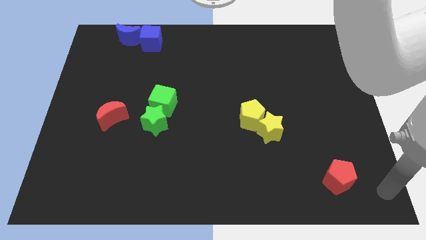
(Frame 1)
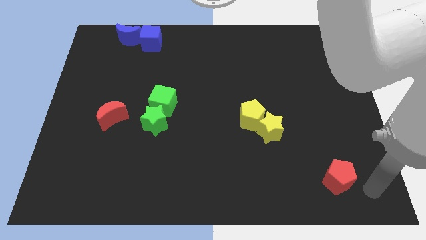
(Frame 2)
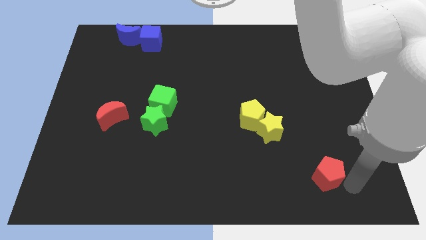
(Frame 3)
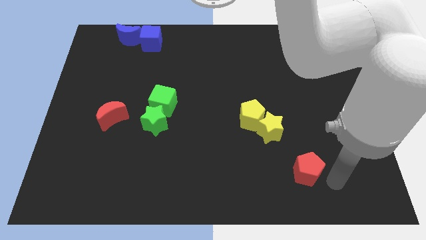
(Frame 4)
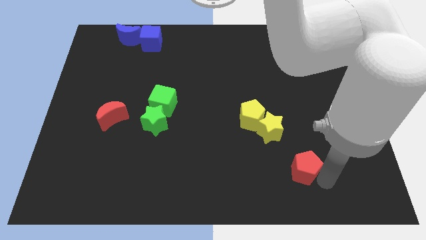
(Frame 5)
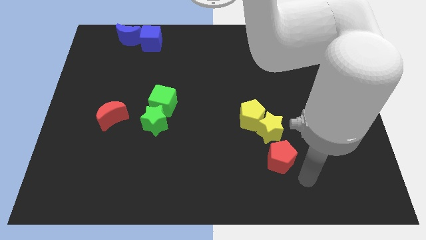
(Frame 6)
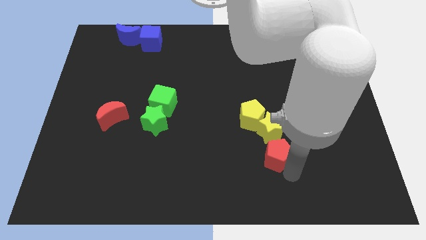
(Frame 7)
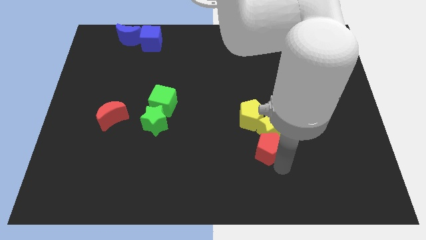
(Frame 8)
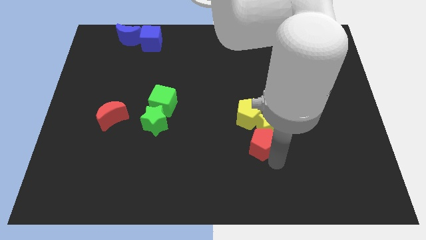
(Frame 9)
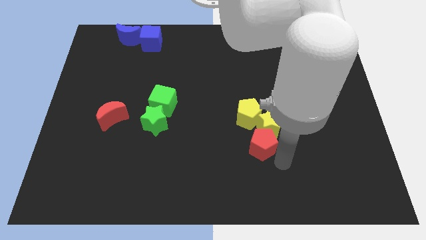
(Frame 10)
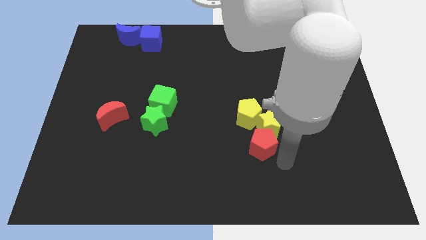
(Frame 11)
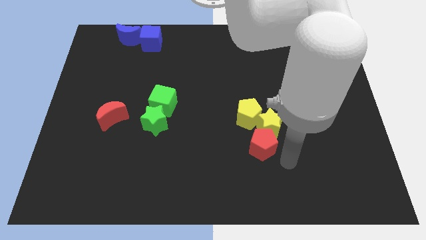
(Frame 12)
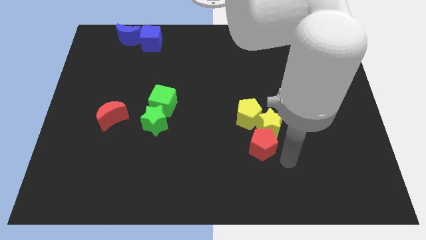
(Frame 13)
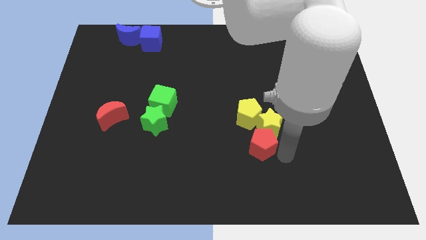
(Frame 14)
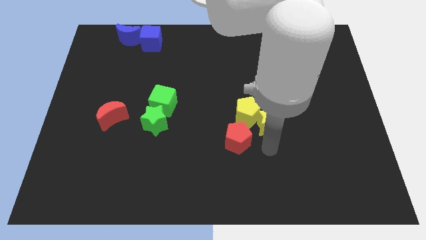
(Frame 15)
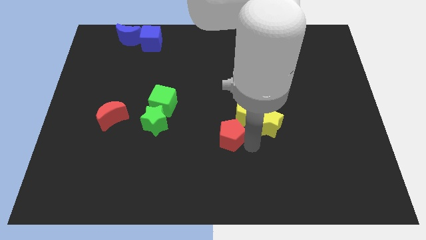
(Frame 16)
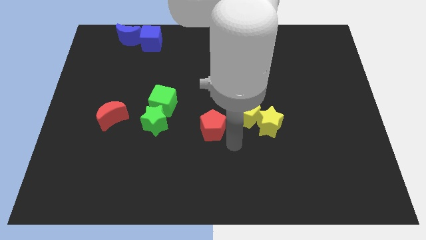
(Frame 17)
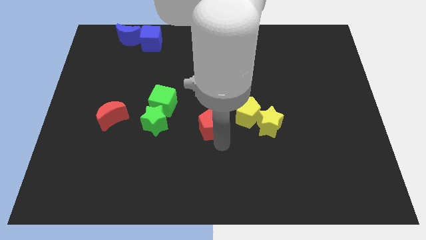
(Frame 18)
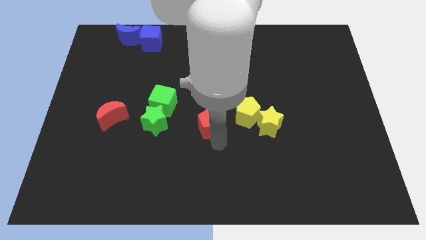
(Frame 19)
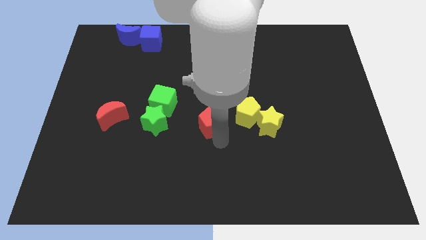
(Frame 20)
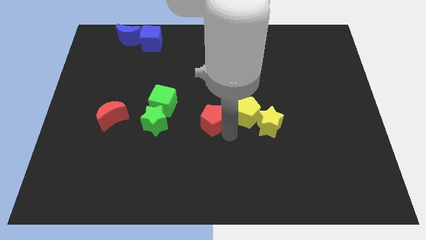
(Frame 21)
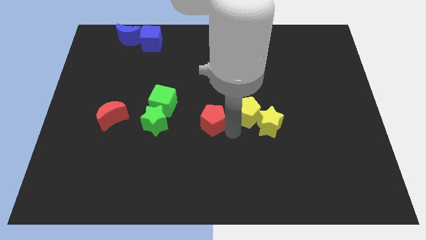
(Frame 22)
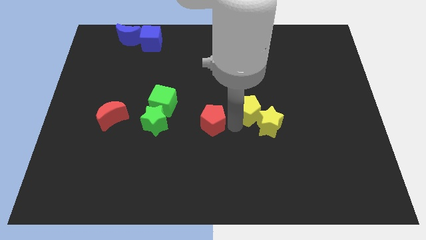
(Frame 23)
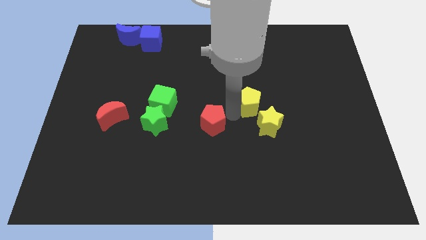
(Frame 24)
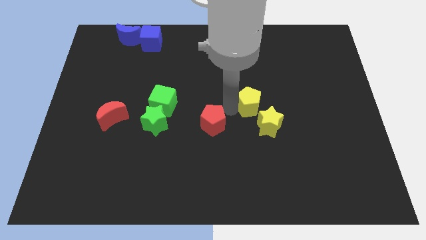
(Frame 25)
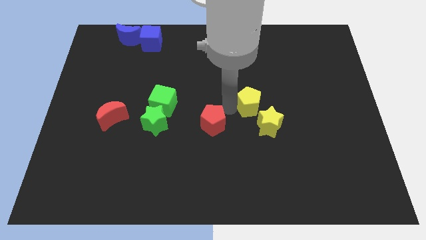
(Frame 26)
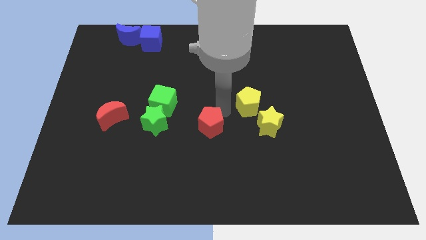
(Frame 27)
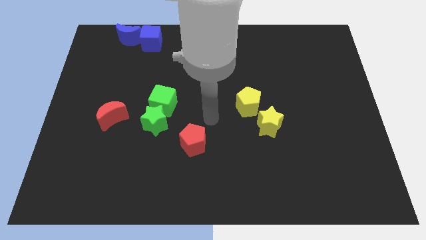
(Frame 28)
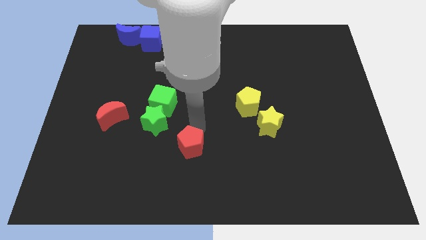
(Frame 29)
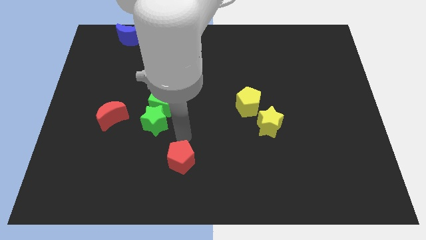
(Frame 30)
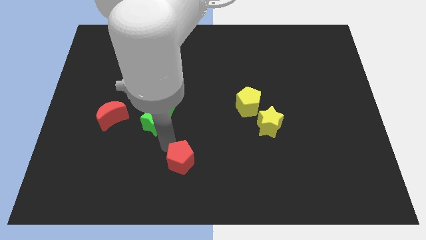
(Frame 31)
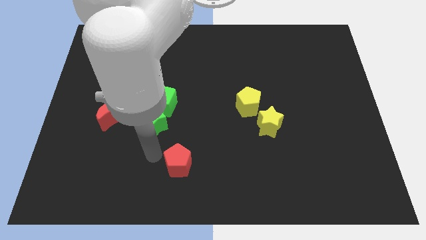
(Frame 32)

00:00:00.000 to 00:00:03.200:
slightly move the yellow pentagon to the top of the board

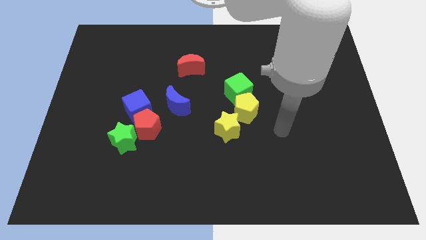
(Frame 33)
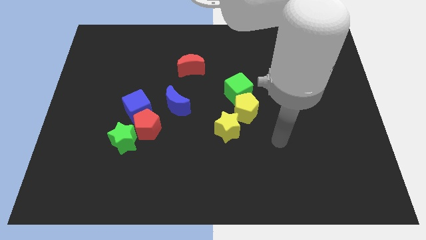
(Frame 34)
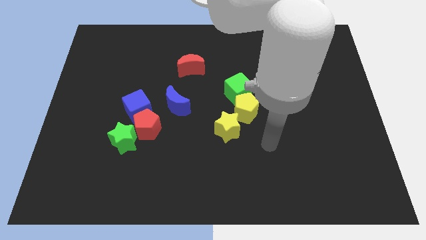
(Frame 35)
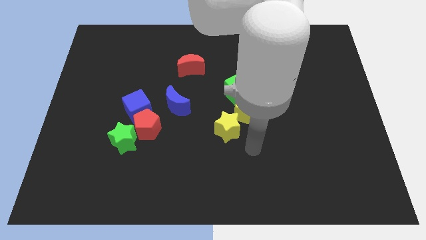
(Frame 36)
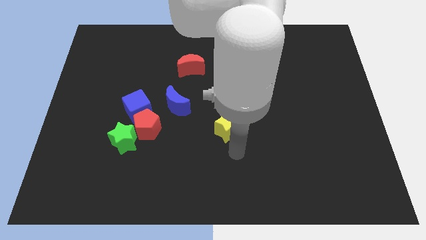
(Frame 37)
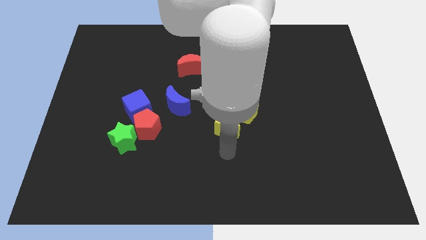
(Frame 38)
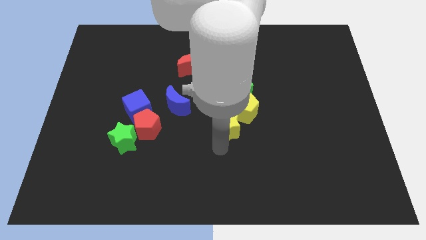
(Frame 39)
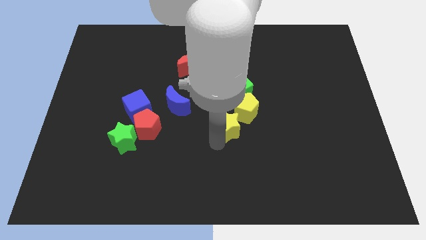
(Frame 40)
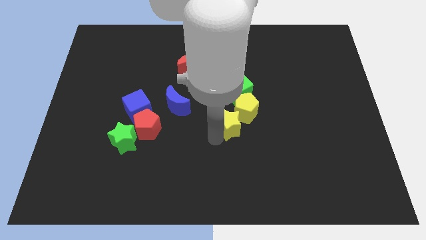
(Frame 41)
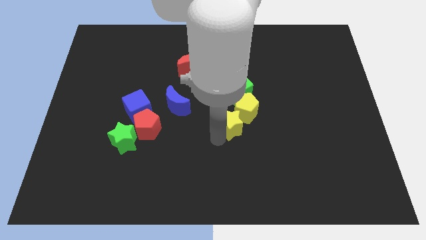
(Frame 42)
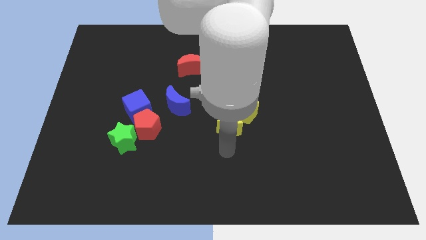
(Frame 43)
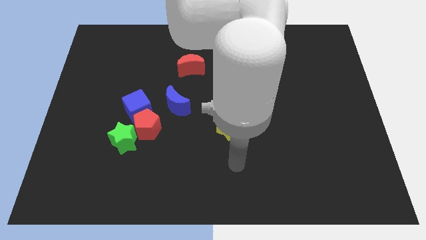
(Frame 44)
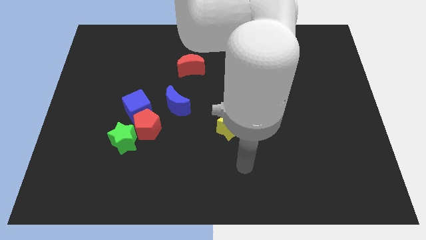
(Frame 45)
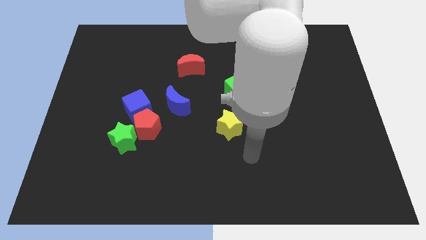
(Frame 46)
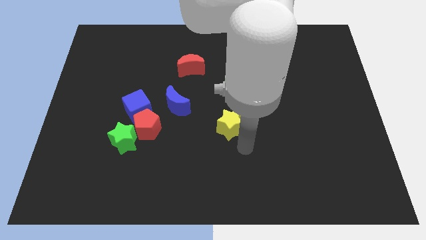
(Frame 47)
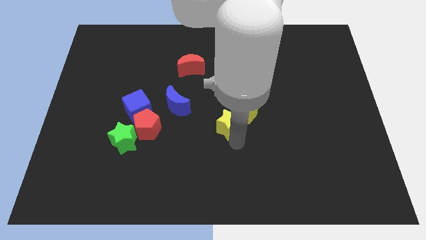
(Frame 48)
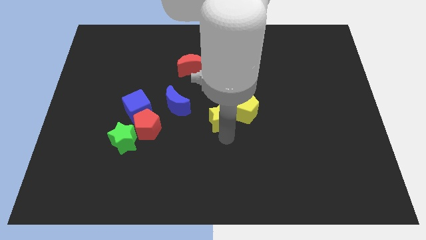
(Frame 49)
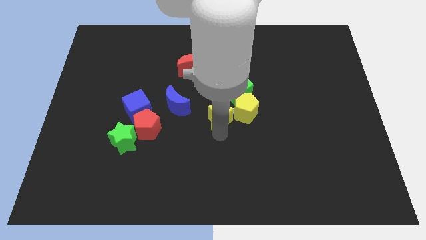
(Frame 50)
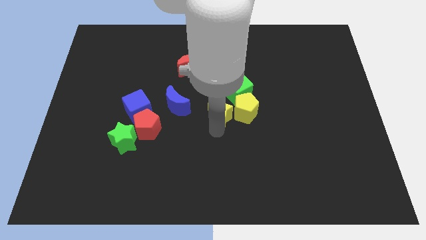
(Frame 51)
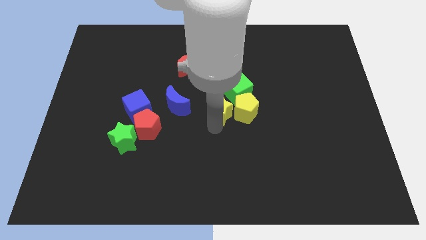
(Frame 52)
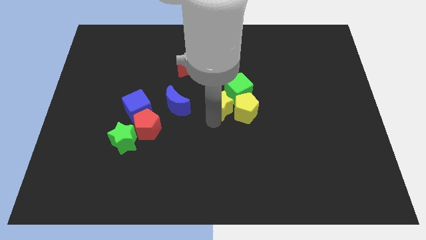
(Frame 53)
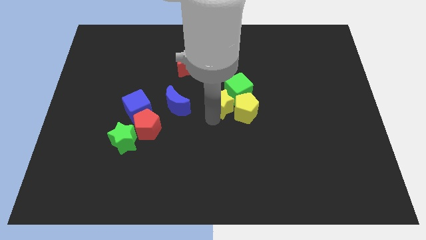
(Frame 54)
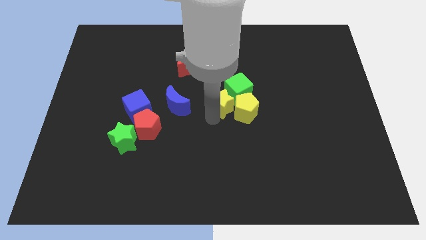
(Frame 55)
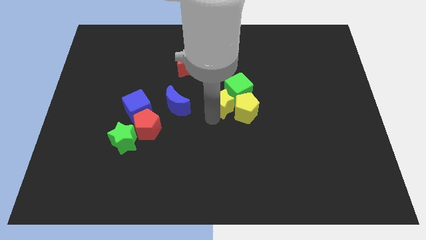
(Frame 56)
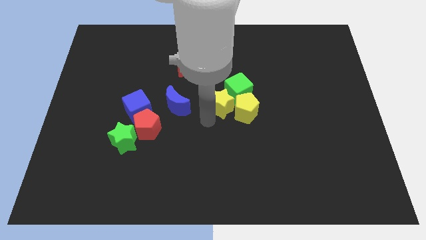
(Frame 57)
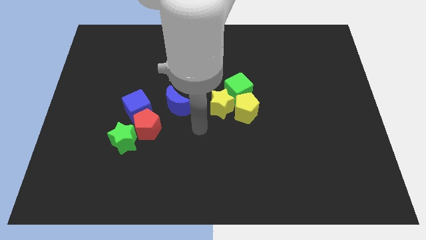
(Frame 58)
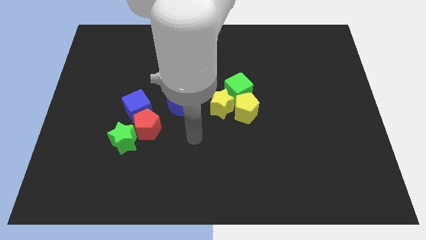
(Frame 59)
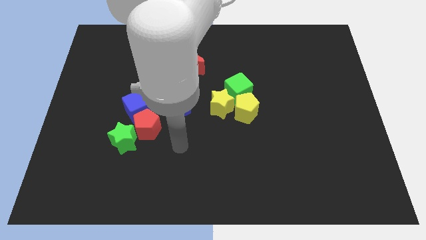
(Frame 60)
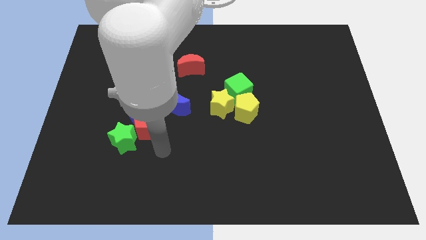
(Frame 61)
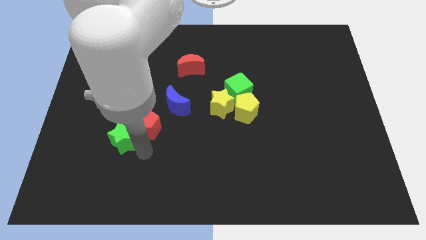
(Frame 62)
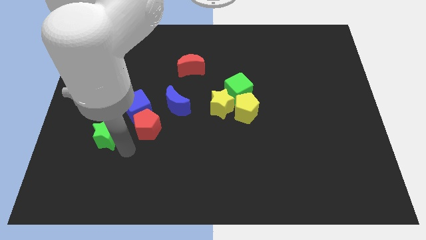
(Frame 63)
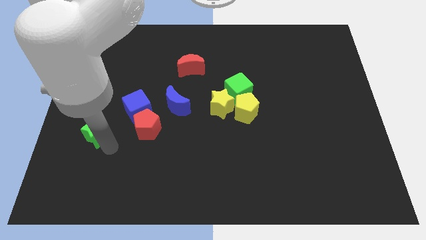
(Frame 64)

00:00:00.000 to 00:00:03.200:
push the yellow star into the yellow pentagon and green cube

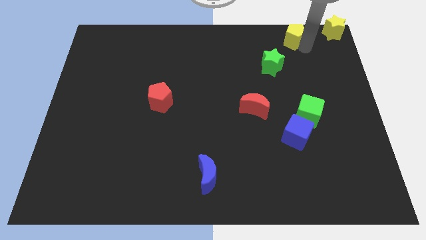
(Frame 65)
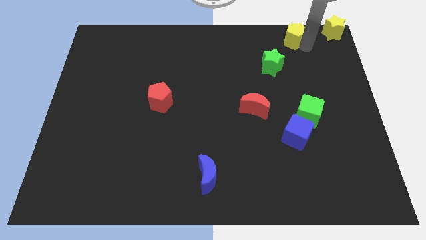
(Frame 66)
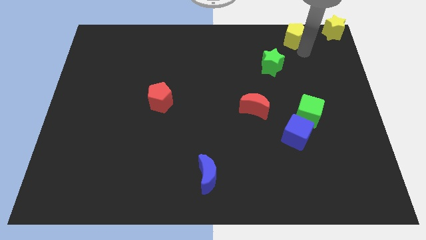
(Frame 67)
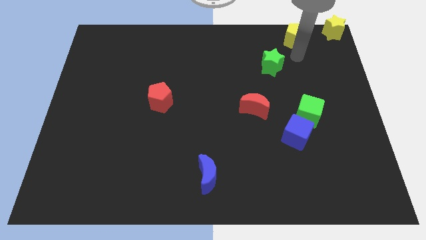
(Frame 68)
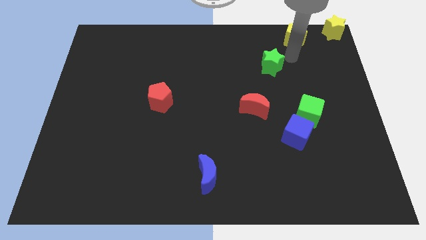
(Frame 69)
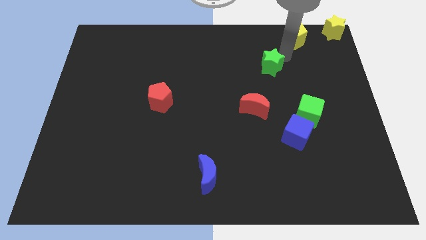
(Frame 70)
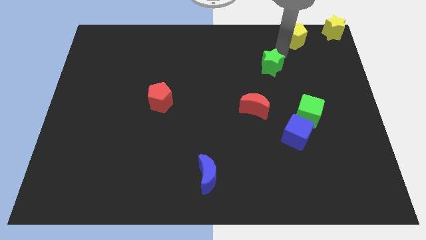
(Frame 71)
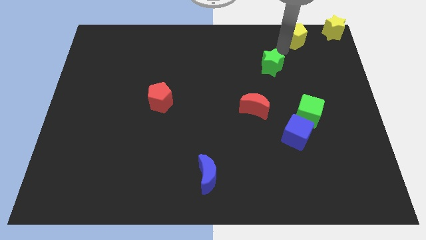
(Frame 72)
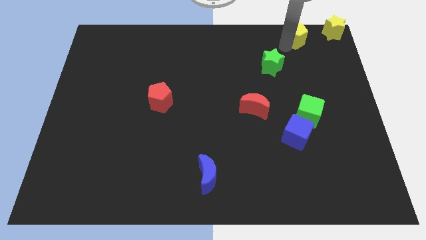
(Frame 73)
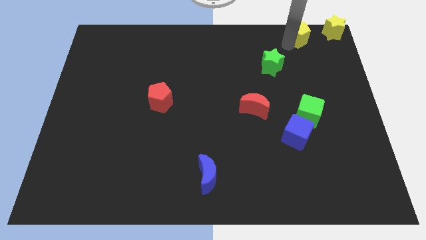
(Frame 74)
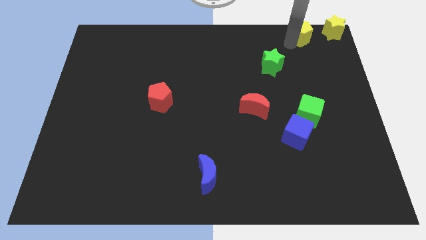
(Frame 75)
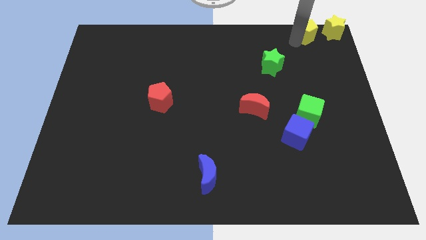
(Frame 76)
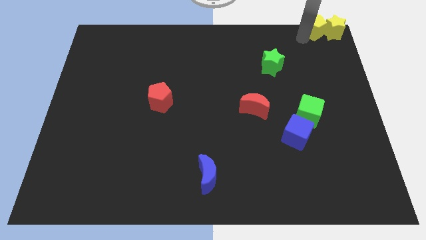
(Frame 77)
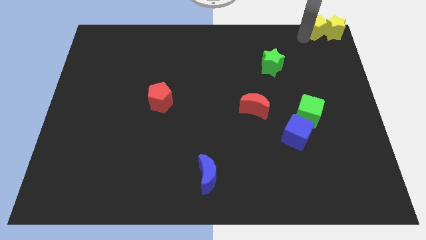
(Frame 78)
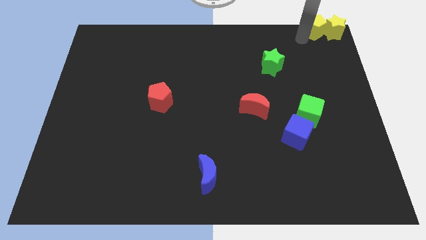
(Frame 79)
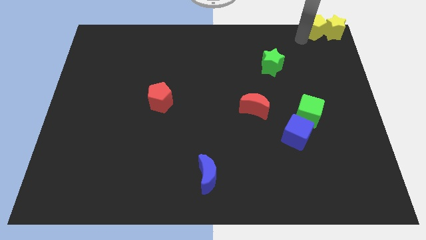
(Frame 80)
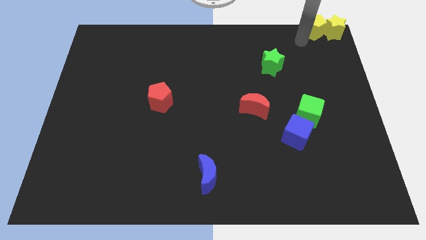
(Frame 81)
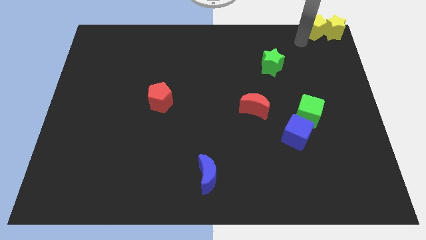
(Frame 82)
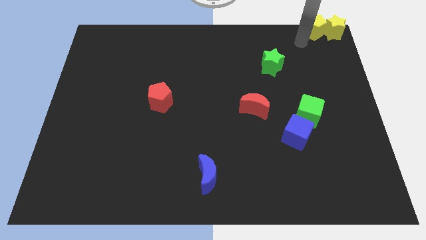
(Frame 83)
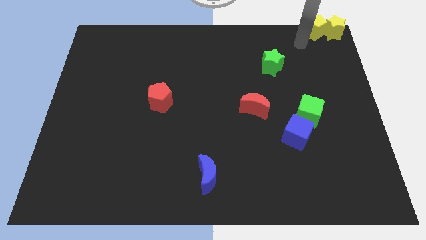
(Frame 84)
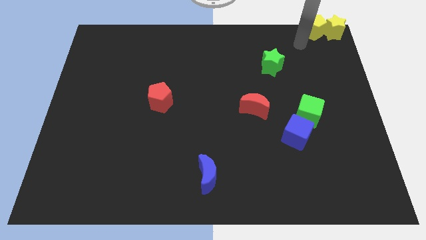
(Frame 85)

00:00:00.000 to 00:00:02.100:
put the yellow pentagon at the top right corner

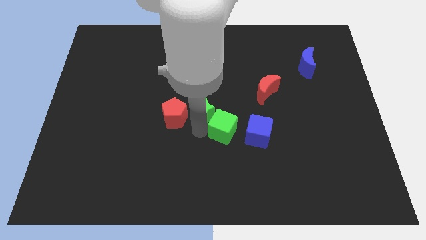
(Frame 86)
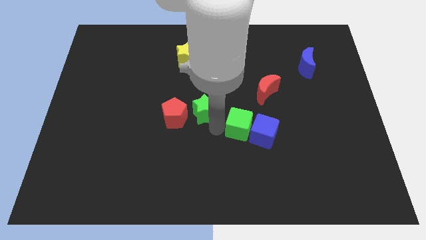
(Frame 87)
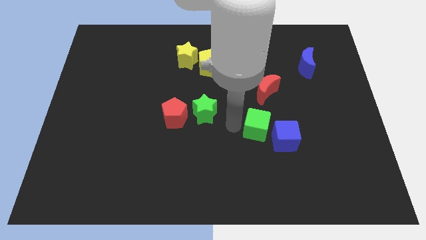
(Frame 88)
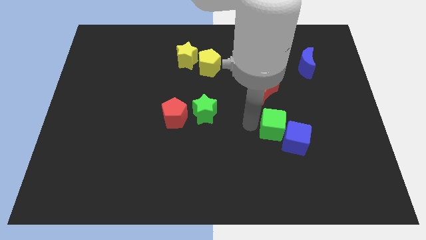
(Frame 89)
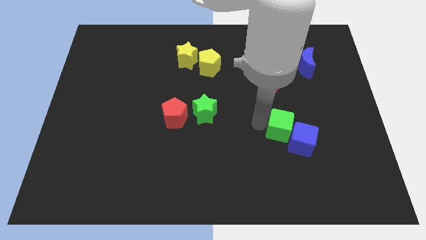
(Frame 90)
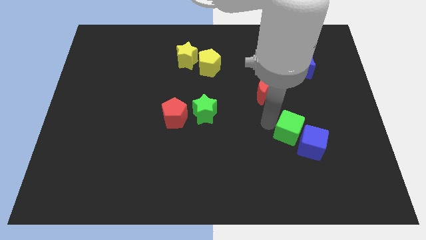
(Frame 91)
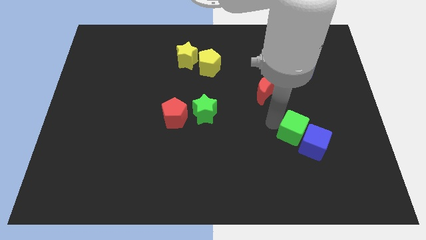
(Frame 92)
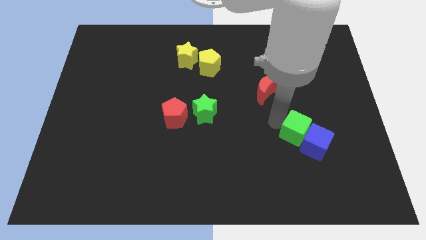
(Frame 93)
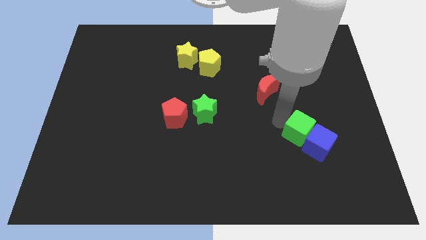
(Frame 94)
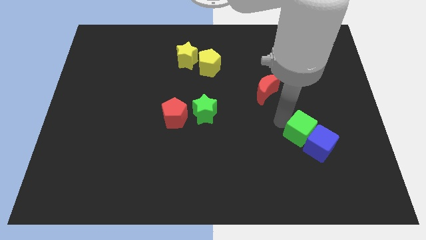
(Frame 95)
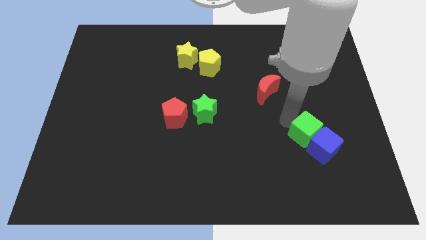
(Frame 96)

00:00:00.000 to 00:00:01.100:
push the green cube into the blue cube
